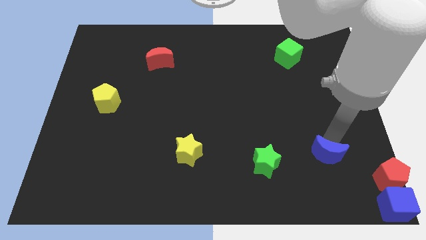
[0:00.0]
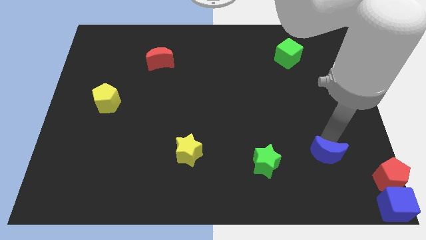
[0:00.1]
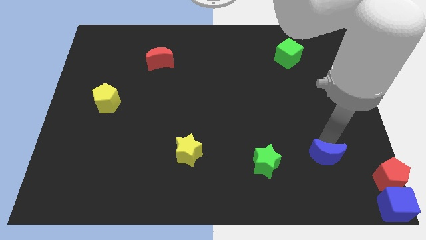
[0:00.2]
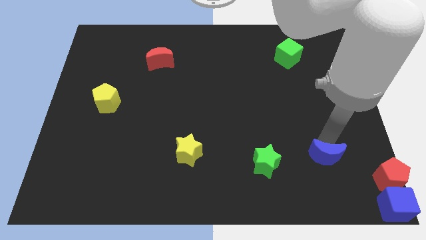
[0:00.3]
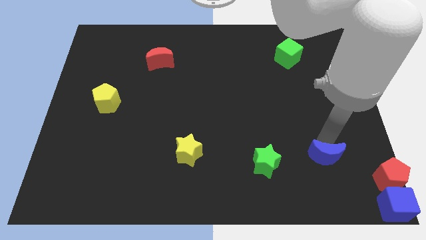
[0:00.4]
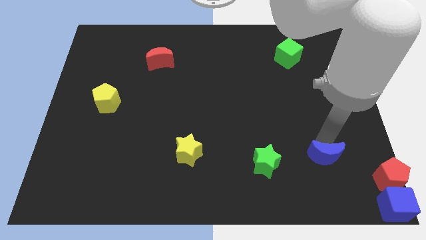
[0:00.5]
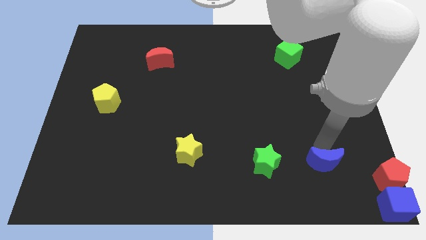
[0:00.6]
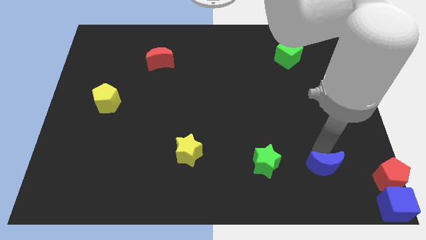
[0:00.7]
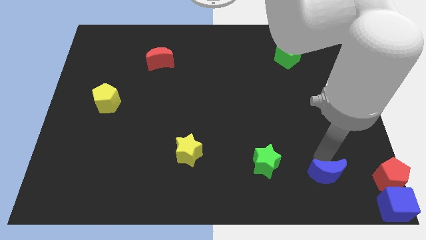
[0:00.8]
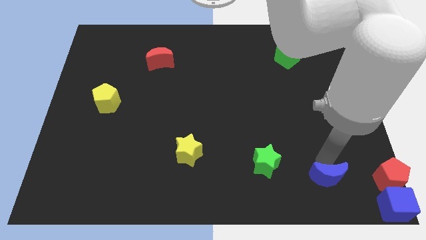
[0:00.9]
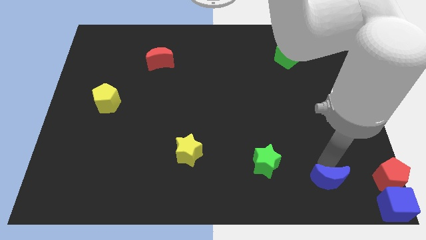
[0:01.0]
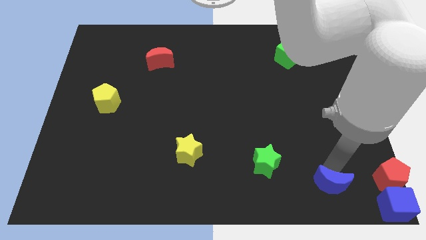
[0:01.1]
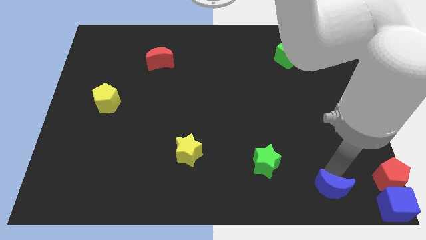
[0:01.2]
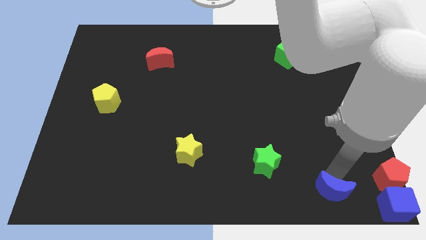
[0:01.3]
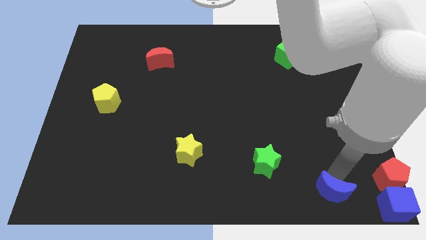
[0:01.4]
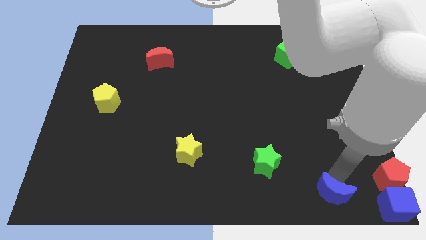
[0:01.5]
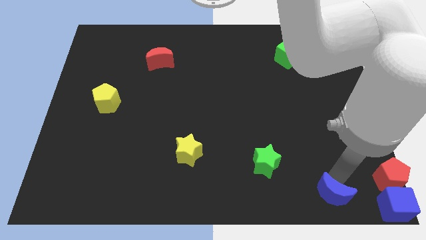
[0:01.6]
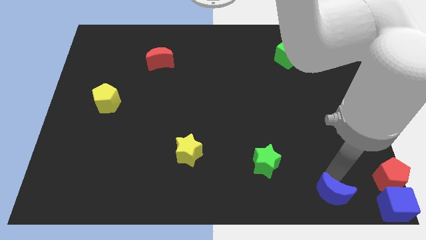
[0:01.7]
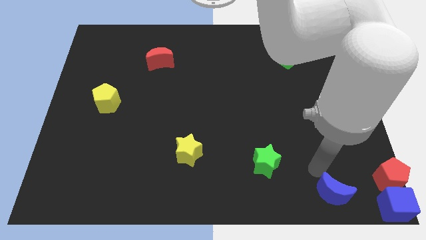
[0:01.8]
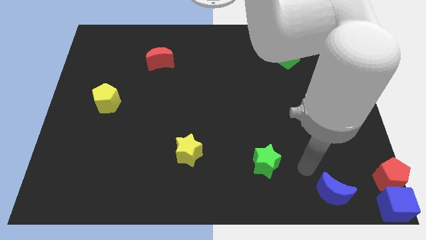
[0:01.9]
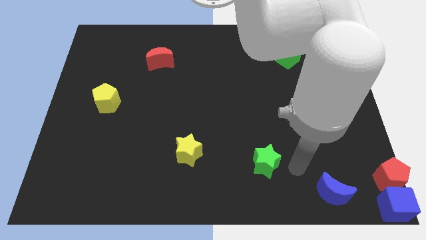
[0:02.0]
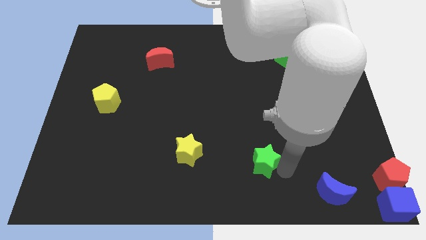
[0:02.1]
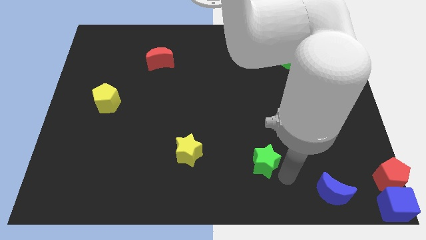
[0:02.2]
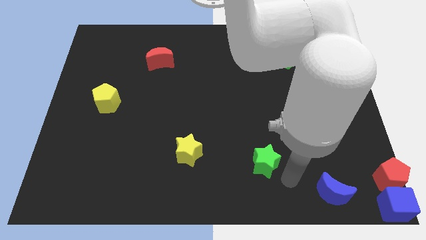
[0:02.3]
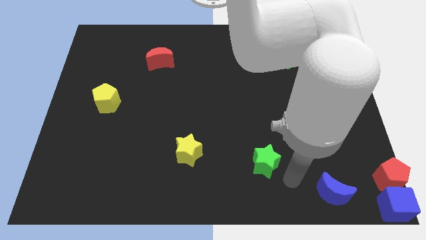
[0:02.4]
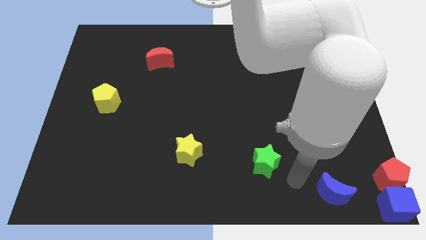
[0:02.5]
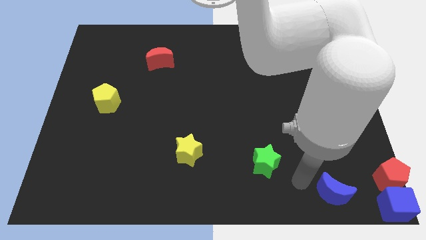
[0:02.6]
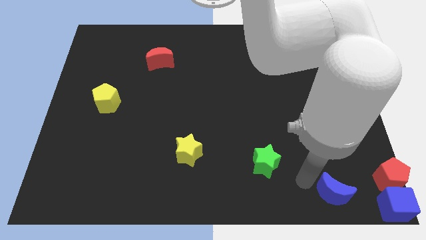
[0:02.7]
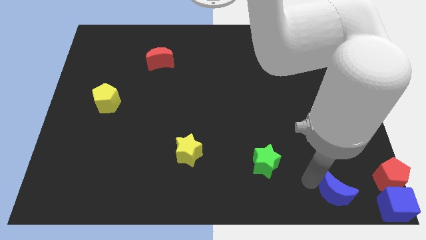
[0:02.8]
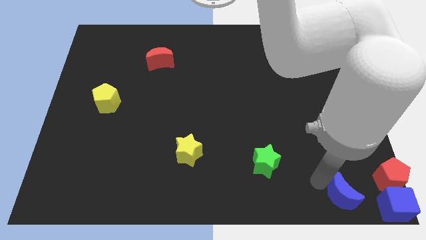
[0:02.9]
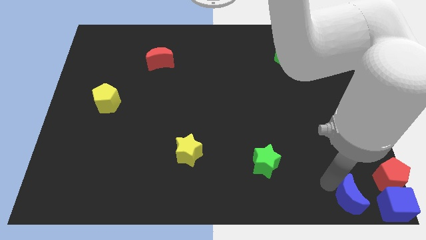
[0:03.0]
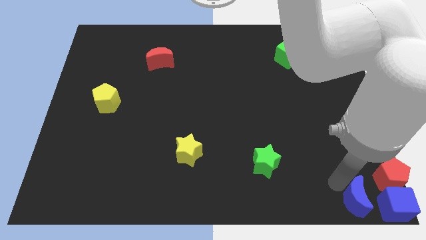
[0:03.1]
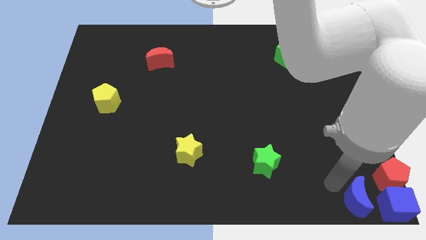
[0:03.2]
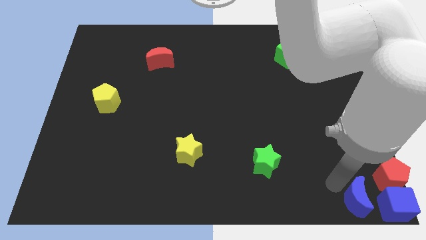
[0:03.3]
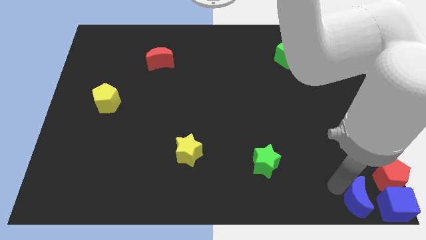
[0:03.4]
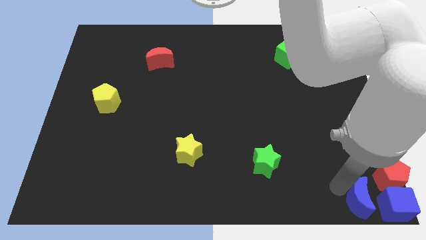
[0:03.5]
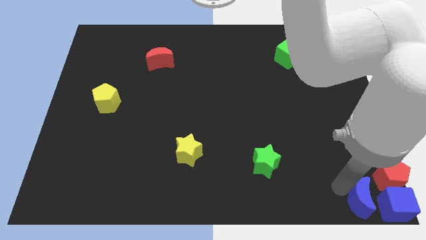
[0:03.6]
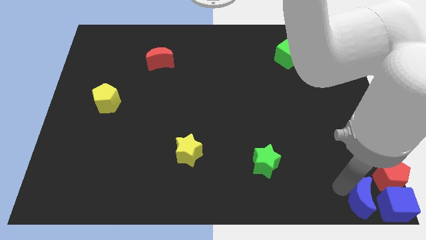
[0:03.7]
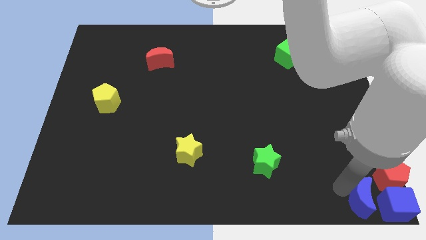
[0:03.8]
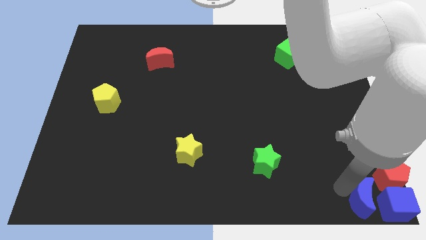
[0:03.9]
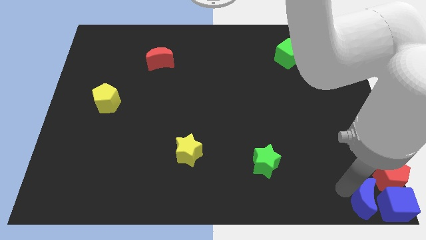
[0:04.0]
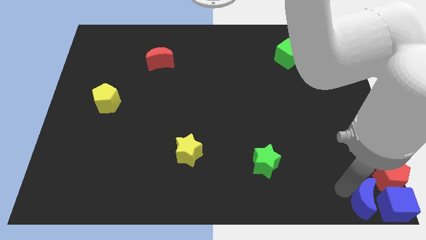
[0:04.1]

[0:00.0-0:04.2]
place the blue crescent to the left side of blue cube

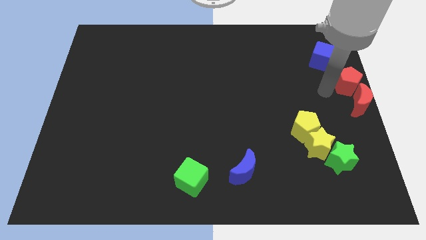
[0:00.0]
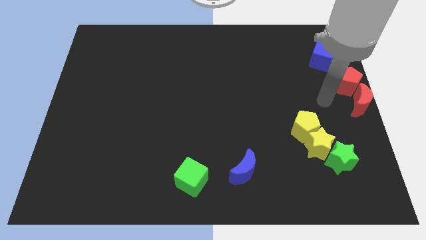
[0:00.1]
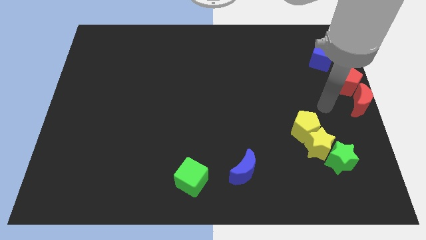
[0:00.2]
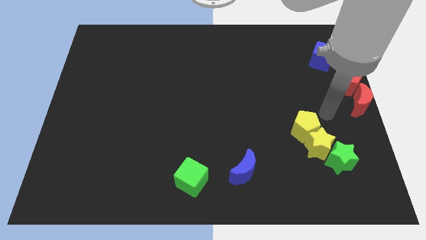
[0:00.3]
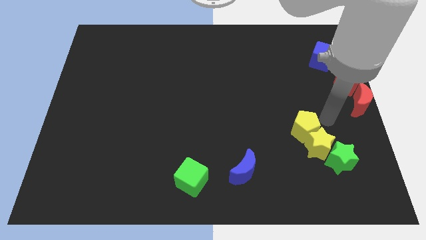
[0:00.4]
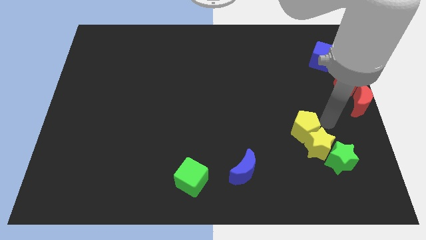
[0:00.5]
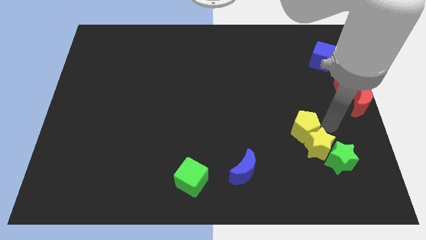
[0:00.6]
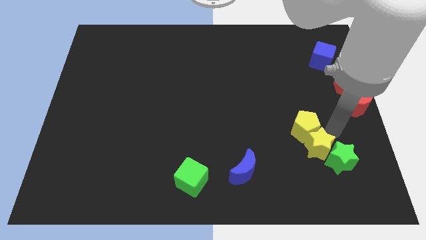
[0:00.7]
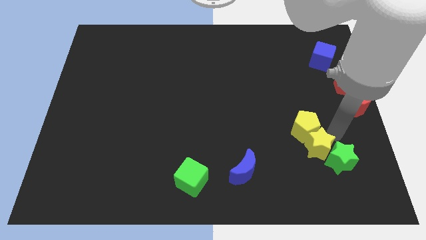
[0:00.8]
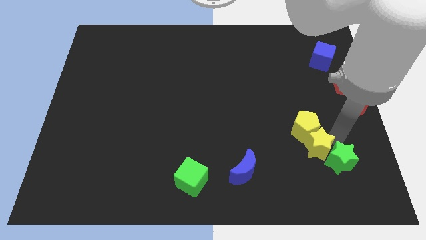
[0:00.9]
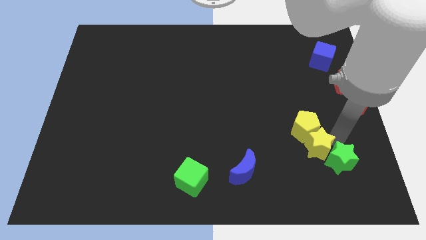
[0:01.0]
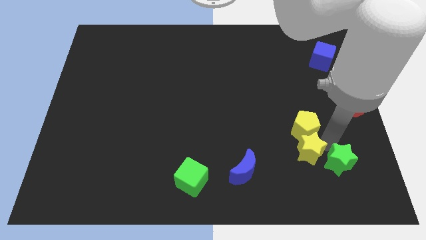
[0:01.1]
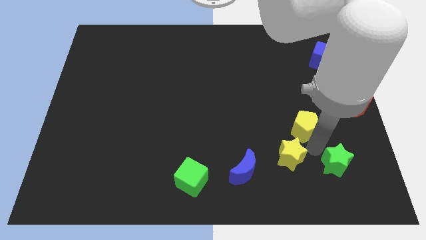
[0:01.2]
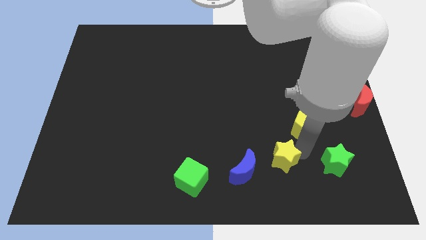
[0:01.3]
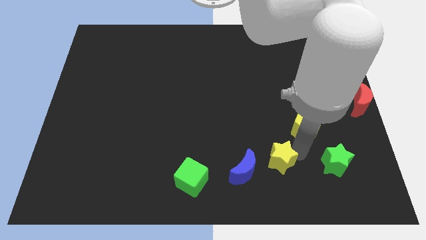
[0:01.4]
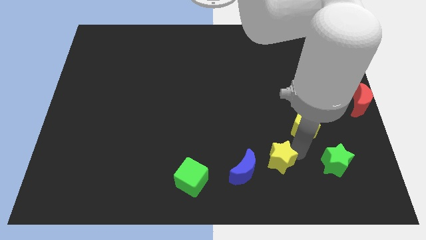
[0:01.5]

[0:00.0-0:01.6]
separate the yellow star and yellow pentagon

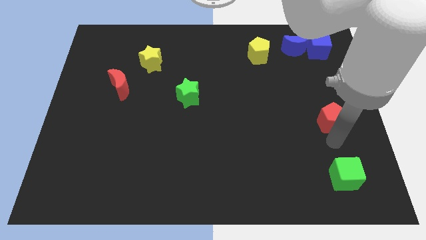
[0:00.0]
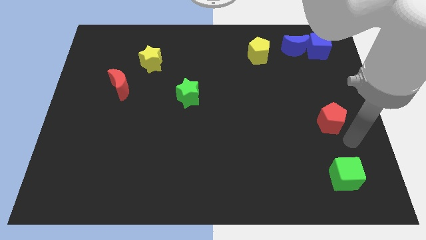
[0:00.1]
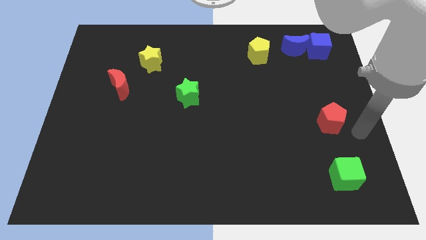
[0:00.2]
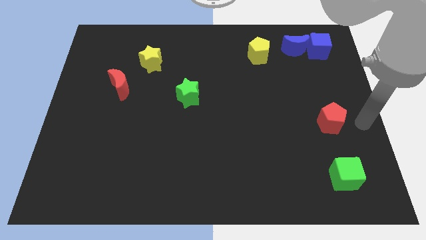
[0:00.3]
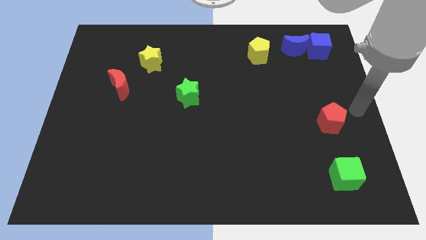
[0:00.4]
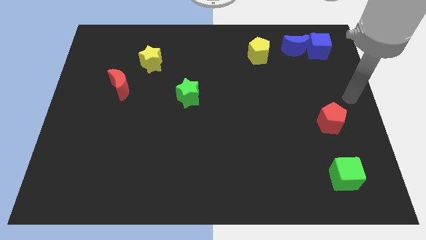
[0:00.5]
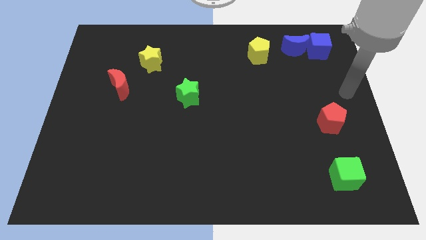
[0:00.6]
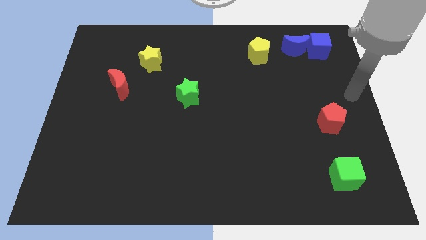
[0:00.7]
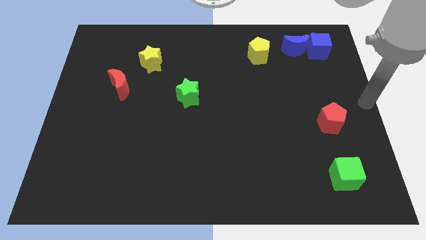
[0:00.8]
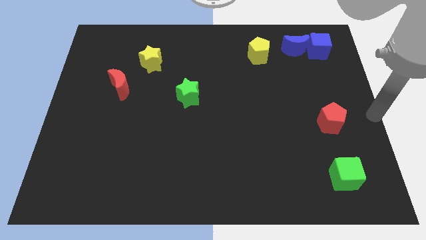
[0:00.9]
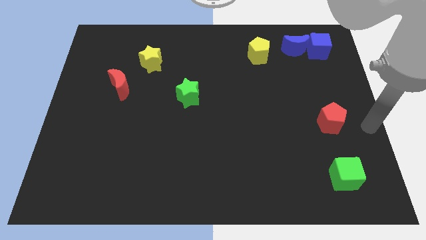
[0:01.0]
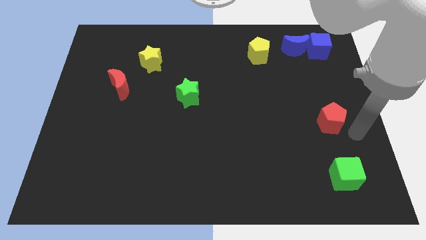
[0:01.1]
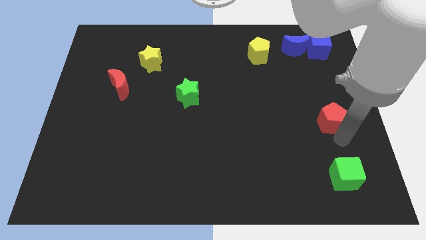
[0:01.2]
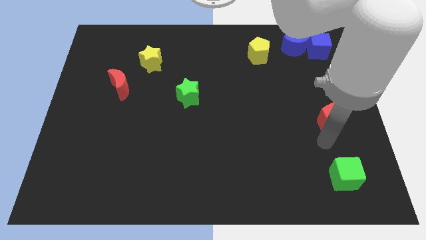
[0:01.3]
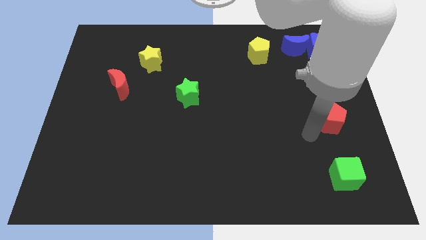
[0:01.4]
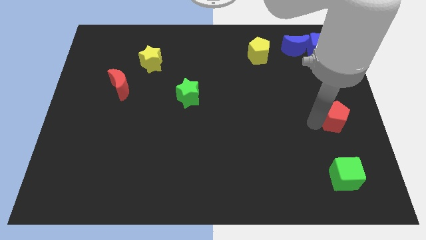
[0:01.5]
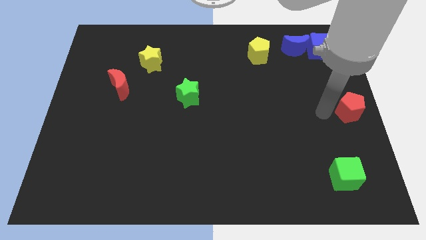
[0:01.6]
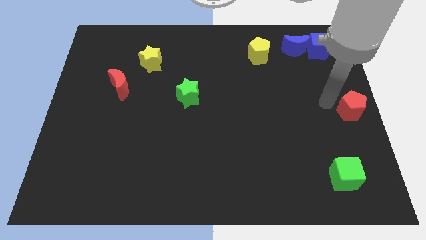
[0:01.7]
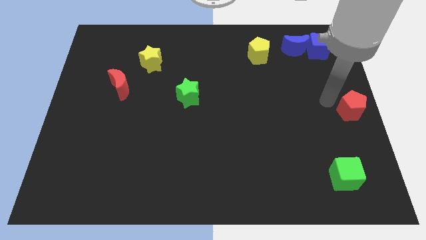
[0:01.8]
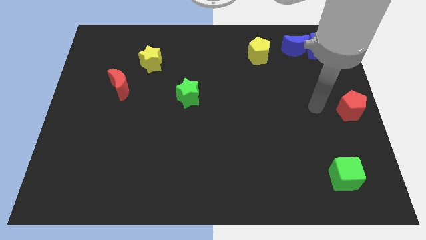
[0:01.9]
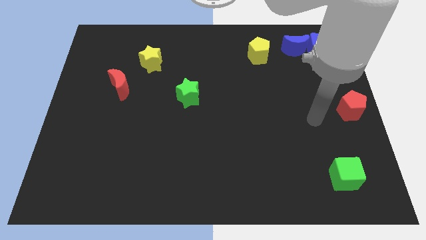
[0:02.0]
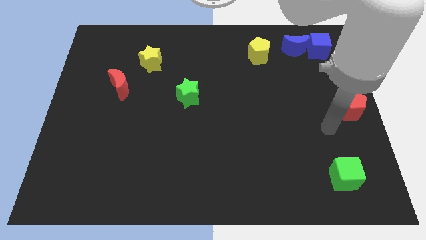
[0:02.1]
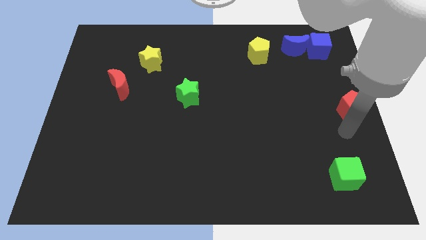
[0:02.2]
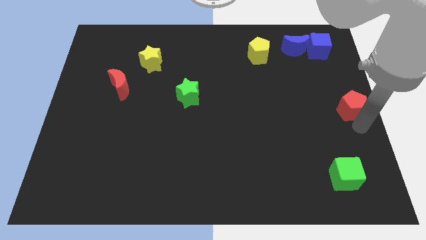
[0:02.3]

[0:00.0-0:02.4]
slide the red pentagon to the center right side of the board

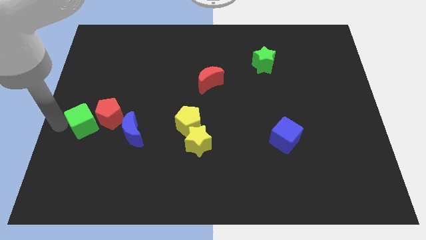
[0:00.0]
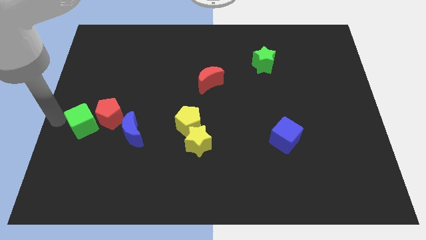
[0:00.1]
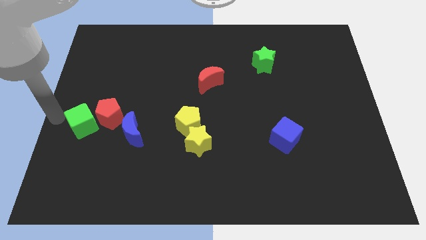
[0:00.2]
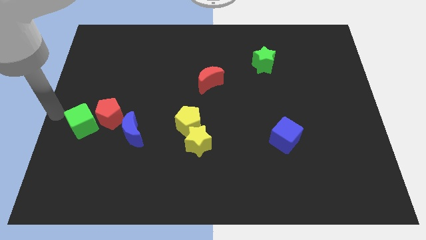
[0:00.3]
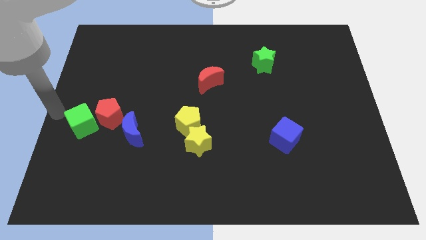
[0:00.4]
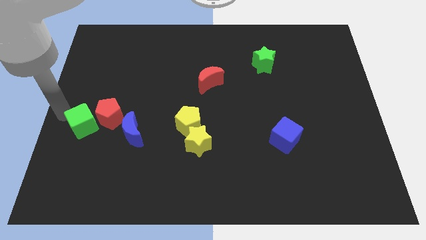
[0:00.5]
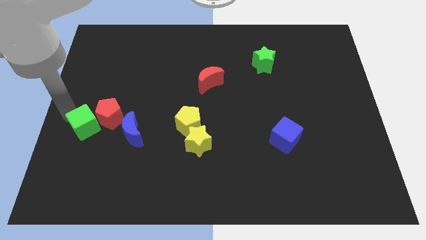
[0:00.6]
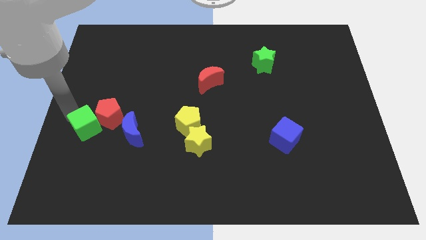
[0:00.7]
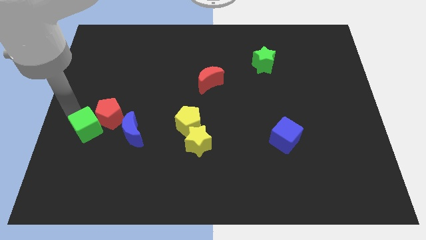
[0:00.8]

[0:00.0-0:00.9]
slightly push the green cube to the left of the red pentagon
